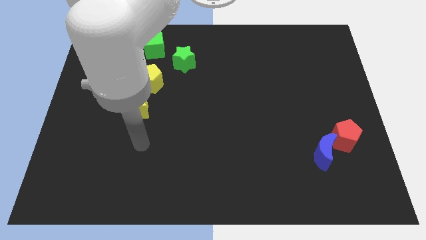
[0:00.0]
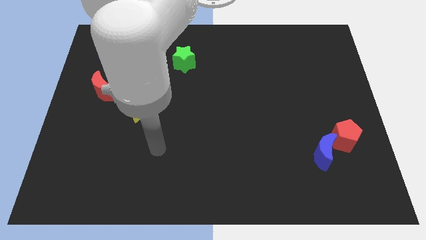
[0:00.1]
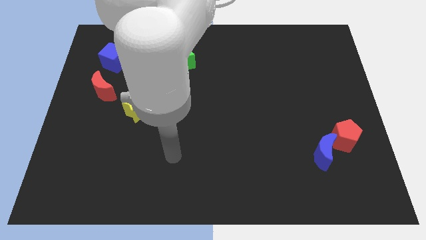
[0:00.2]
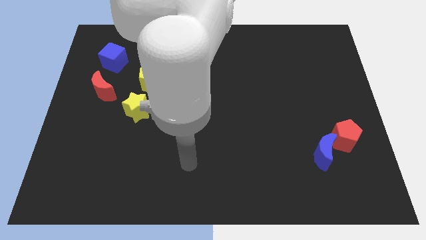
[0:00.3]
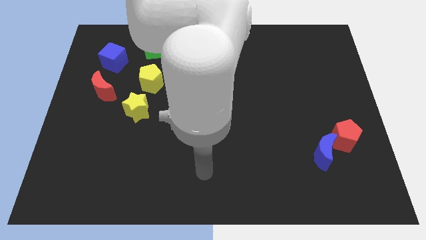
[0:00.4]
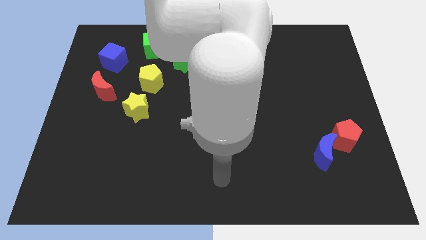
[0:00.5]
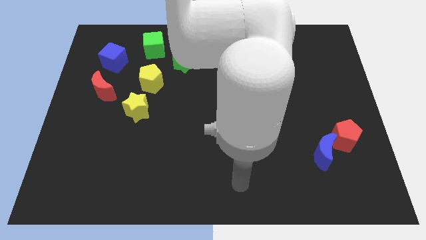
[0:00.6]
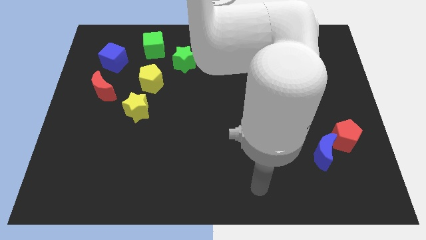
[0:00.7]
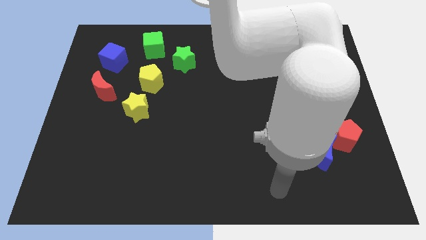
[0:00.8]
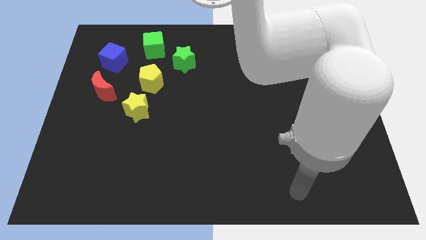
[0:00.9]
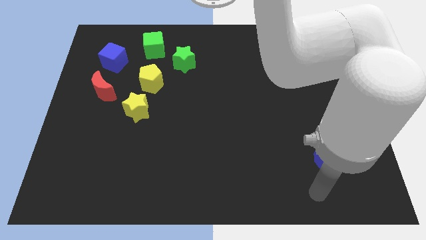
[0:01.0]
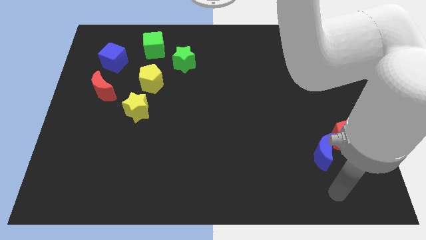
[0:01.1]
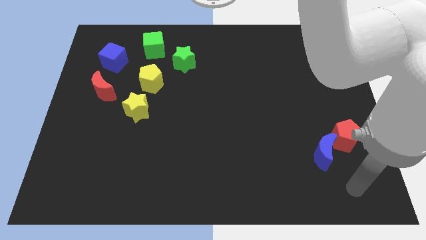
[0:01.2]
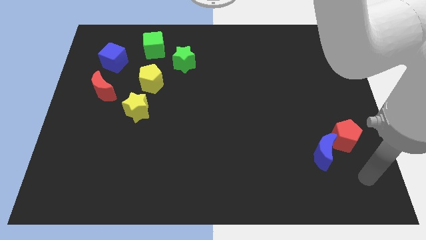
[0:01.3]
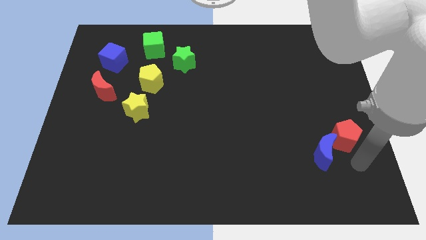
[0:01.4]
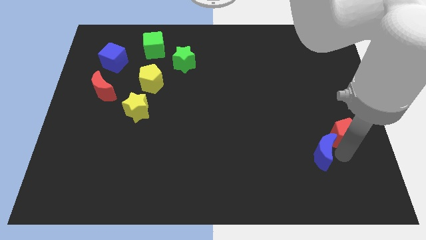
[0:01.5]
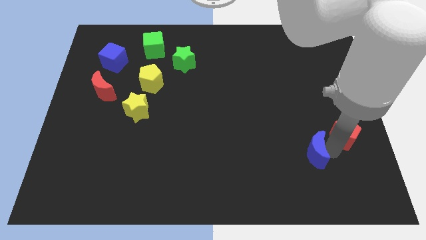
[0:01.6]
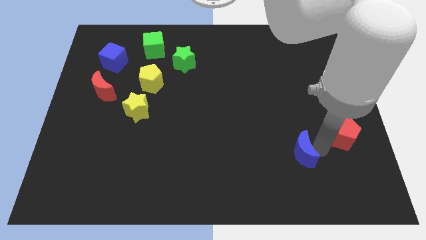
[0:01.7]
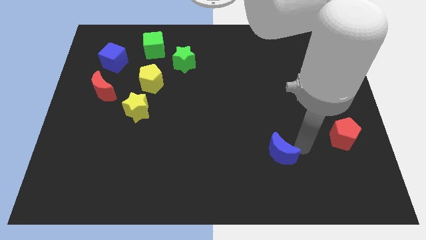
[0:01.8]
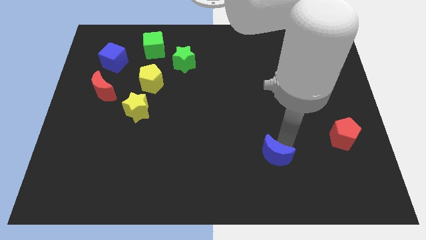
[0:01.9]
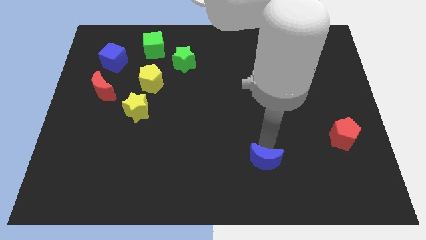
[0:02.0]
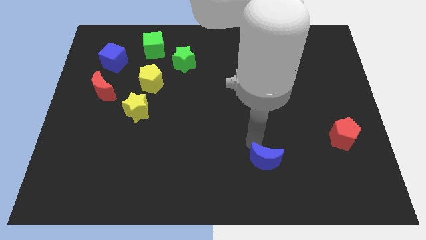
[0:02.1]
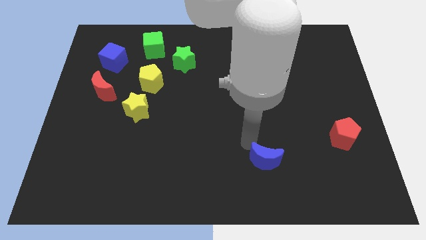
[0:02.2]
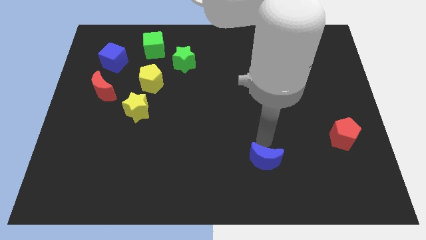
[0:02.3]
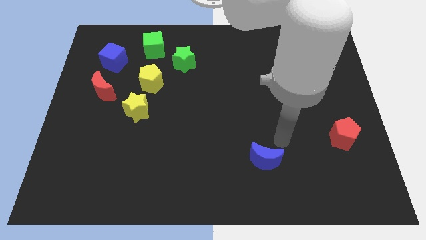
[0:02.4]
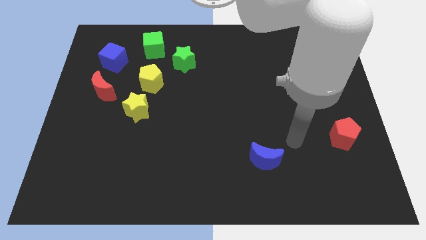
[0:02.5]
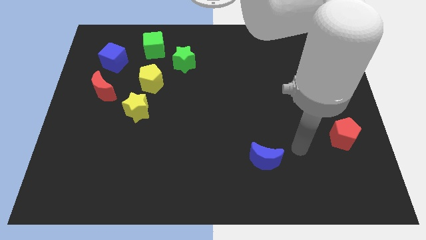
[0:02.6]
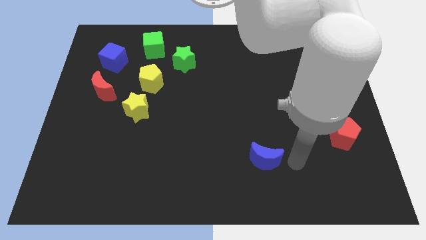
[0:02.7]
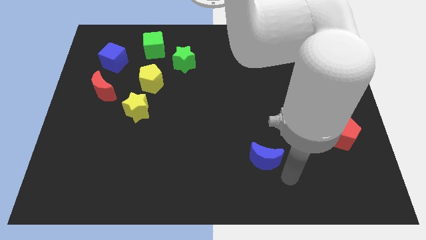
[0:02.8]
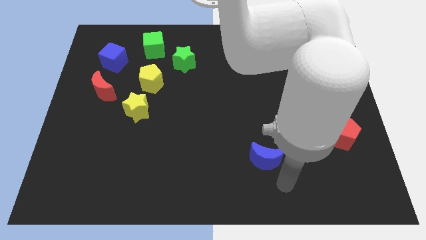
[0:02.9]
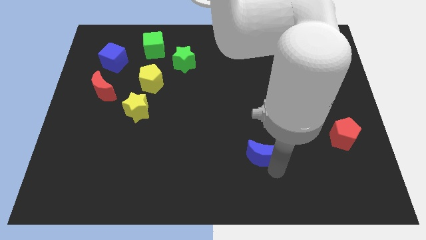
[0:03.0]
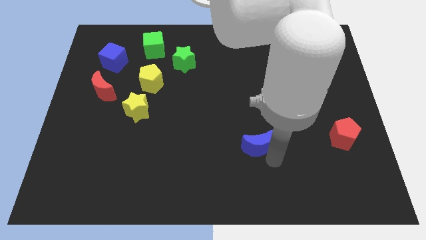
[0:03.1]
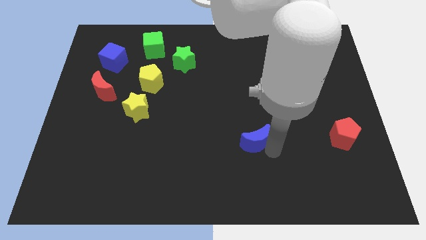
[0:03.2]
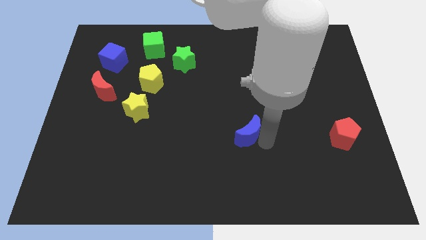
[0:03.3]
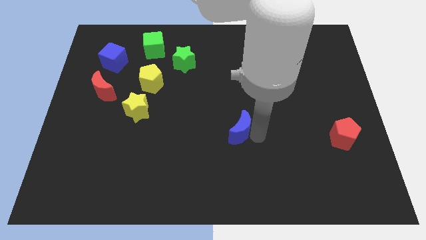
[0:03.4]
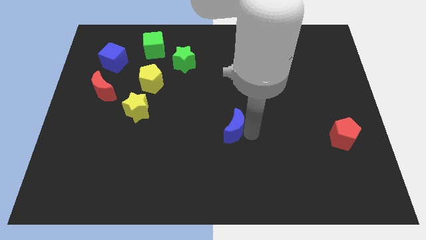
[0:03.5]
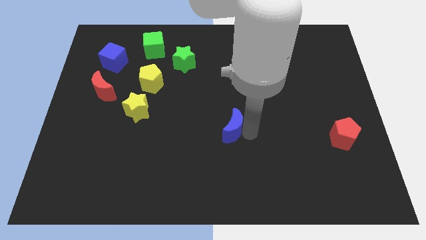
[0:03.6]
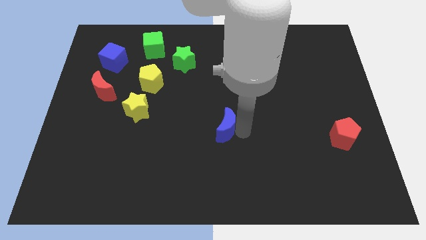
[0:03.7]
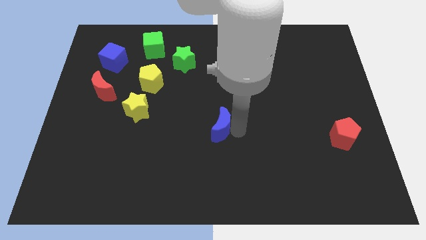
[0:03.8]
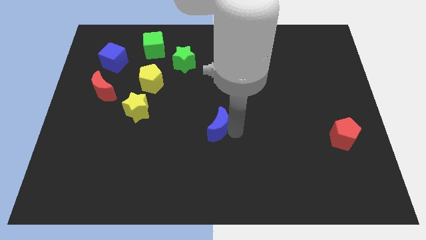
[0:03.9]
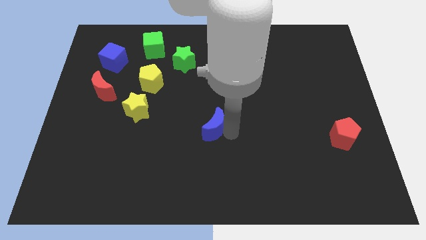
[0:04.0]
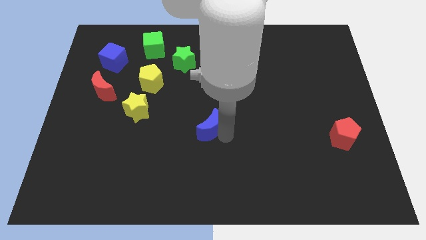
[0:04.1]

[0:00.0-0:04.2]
separate blue moon from red pentagon

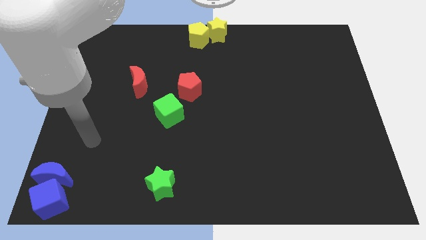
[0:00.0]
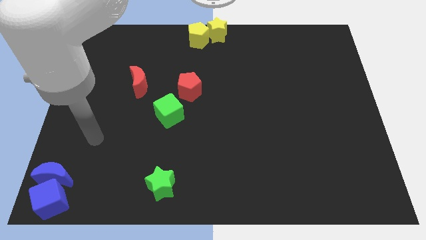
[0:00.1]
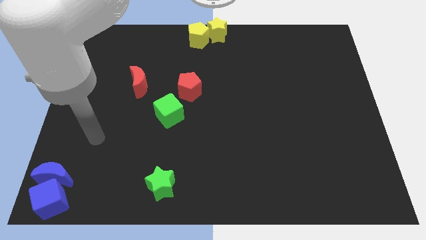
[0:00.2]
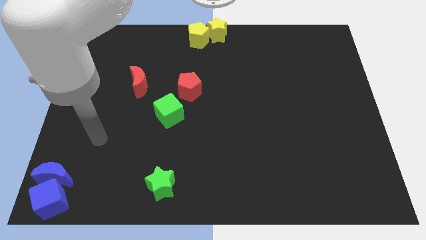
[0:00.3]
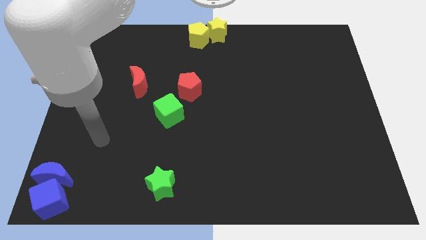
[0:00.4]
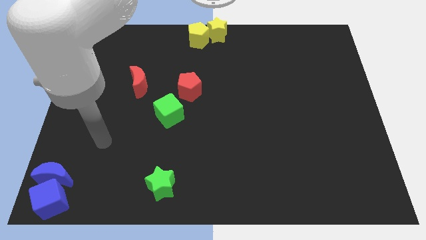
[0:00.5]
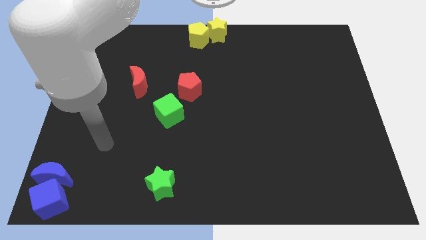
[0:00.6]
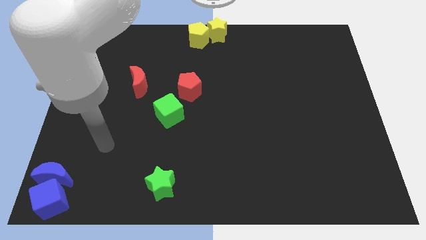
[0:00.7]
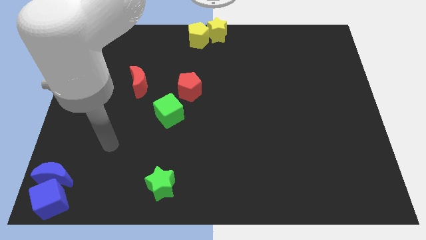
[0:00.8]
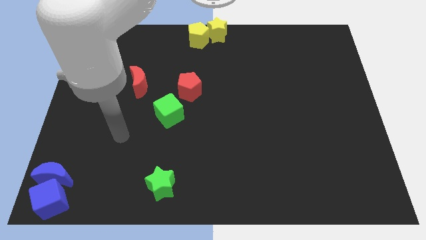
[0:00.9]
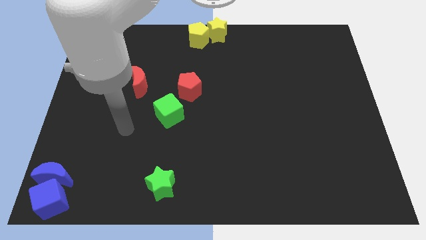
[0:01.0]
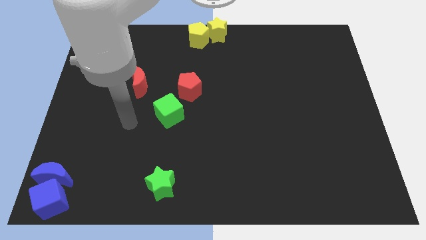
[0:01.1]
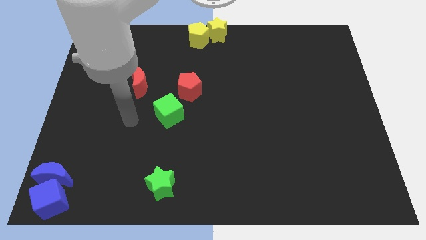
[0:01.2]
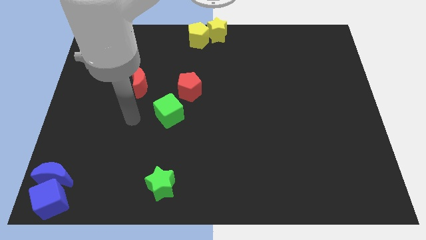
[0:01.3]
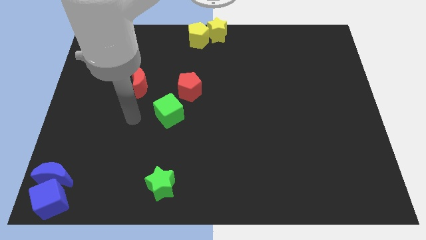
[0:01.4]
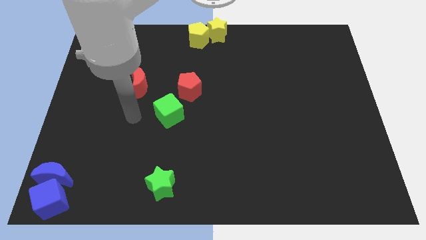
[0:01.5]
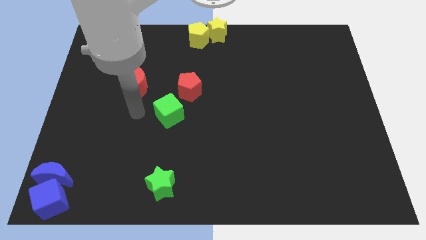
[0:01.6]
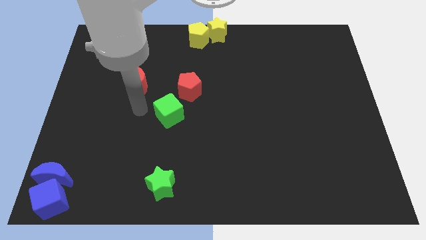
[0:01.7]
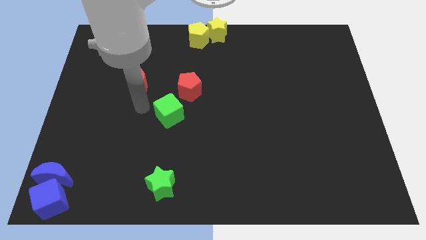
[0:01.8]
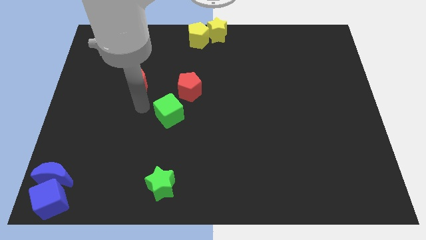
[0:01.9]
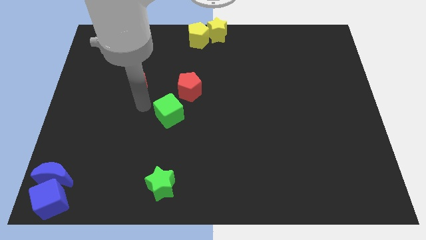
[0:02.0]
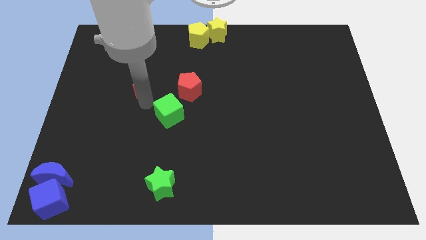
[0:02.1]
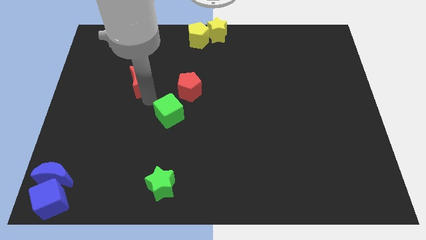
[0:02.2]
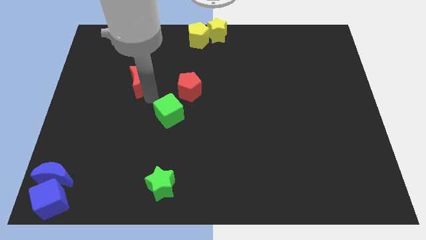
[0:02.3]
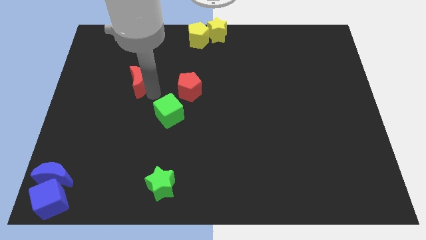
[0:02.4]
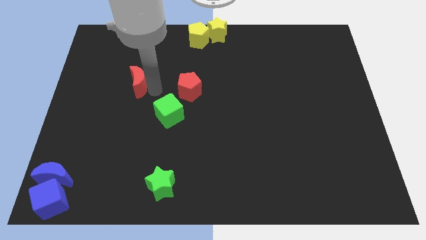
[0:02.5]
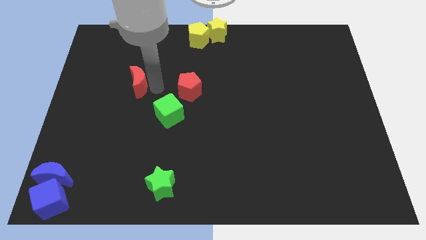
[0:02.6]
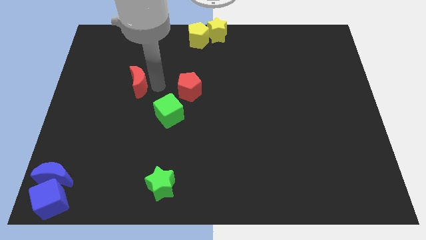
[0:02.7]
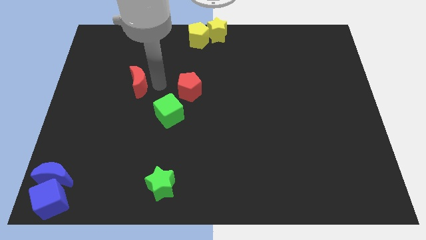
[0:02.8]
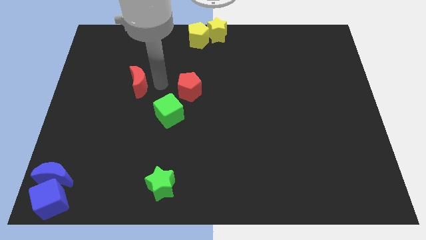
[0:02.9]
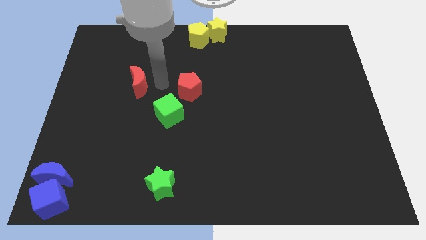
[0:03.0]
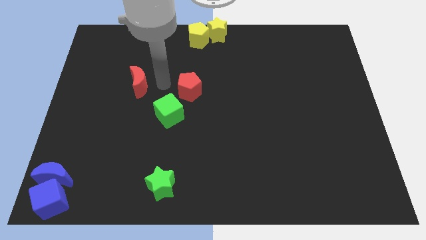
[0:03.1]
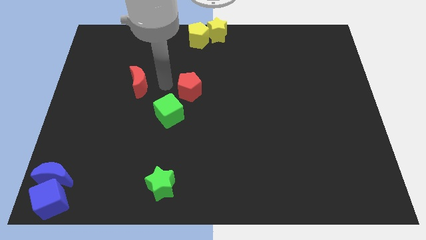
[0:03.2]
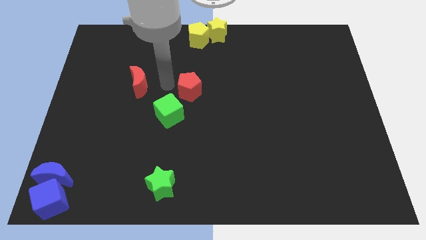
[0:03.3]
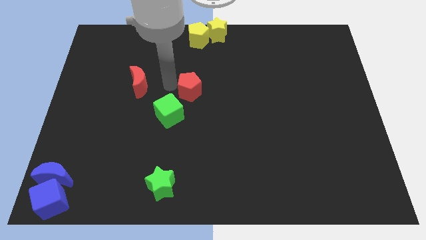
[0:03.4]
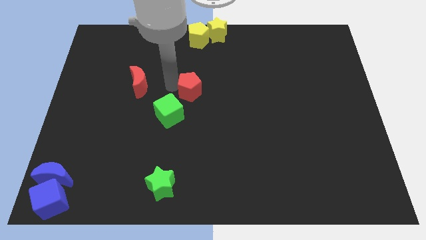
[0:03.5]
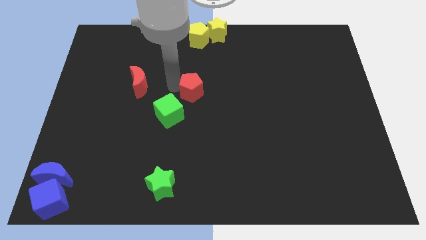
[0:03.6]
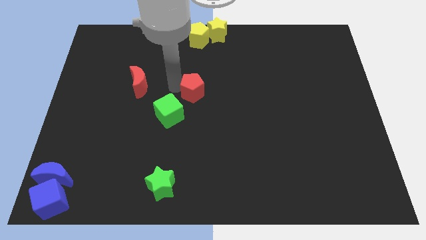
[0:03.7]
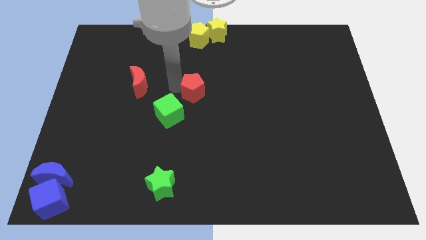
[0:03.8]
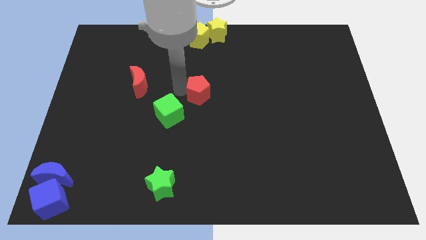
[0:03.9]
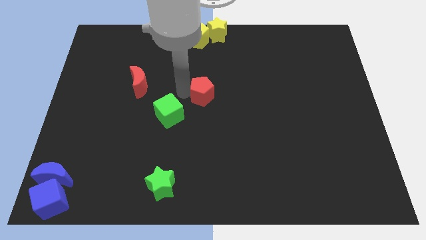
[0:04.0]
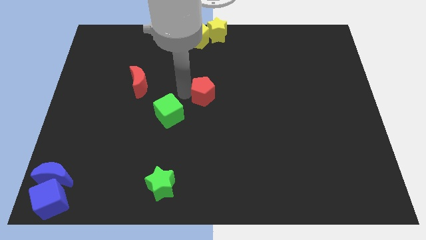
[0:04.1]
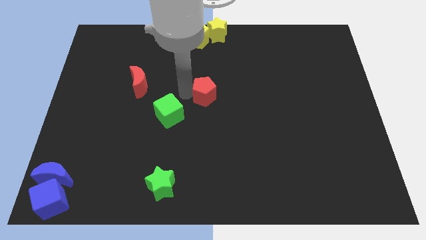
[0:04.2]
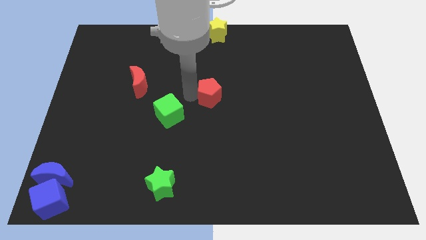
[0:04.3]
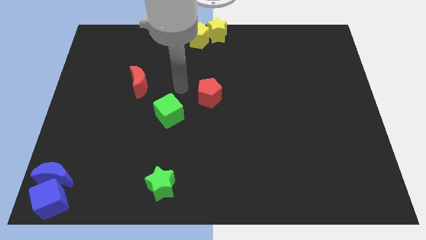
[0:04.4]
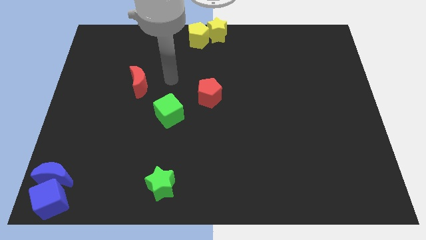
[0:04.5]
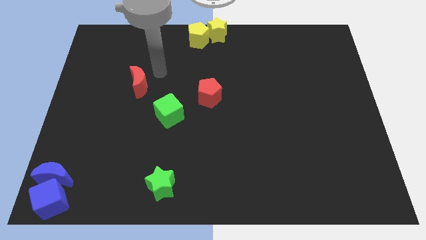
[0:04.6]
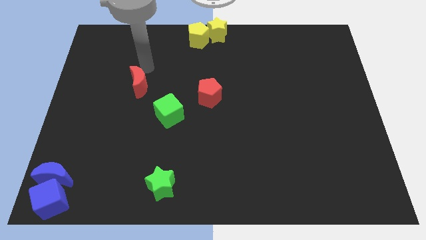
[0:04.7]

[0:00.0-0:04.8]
move red pentagon slightly right

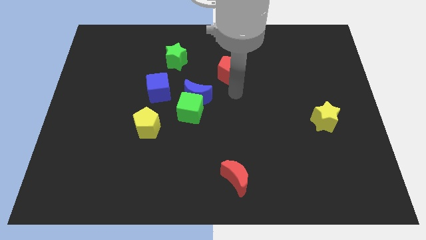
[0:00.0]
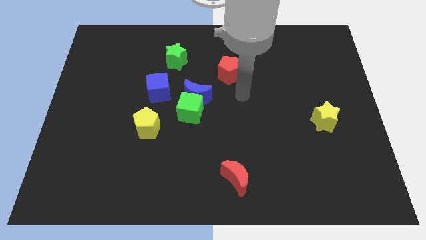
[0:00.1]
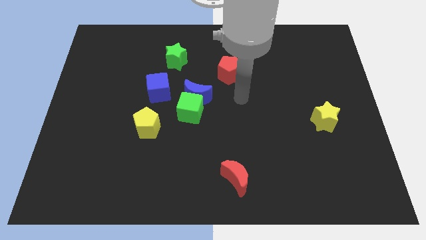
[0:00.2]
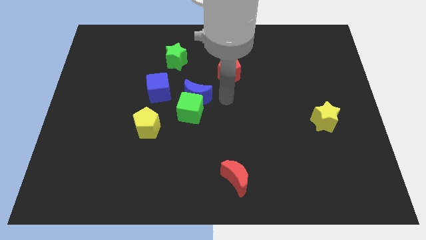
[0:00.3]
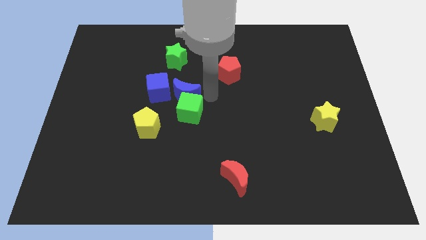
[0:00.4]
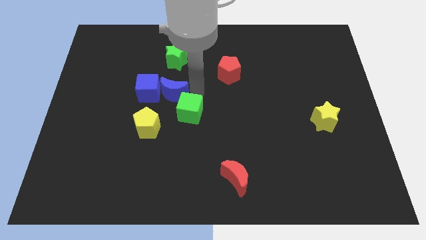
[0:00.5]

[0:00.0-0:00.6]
push blue crescent in to blue cube
